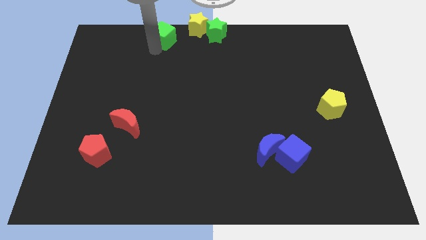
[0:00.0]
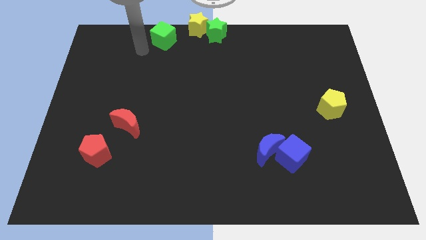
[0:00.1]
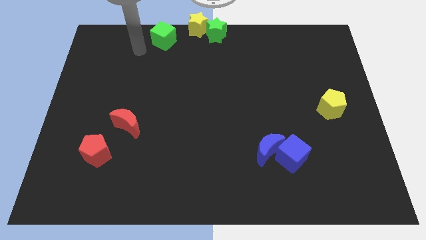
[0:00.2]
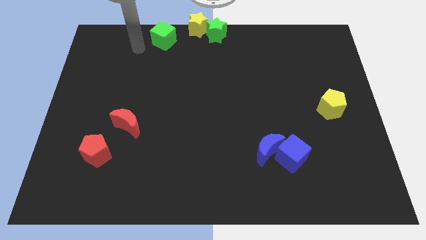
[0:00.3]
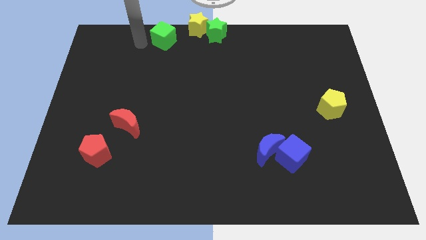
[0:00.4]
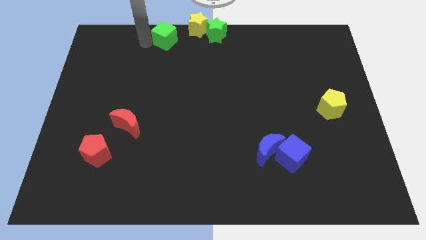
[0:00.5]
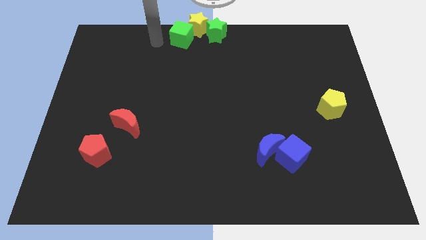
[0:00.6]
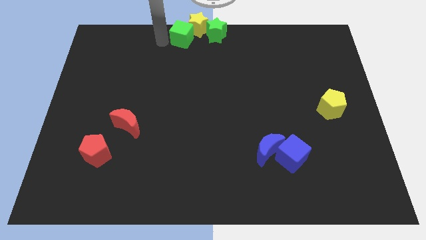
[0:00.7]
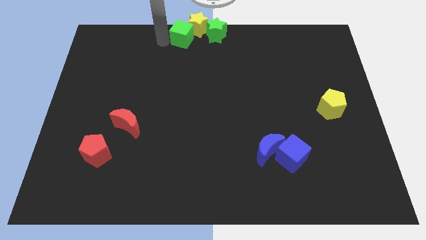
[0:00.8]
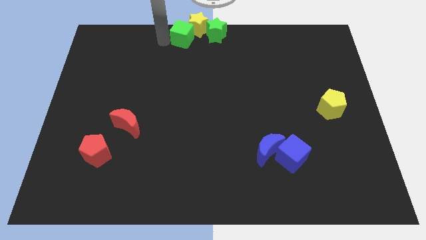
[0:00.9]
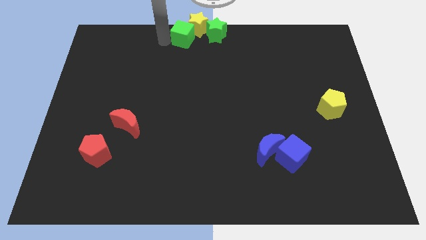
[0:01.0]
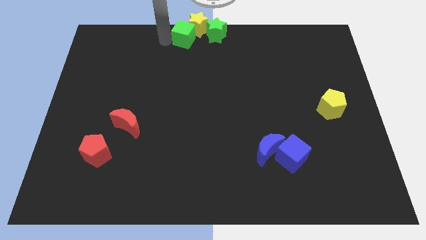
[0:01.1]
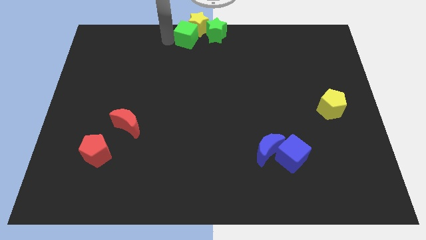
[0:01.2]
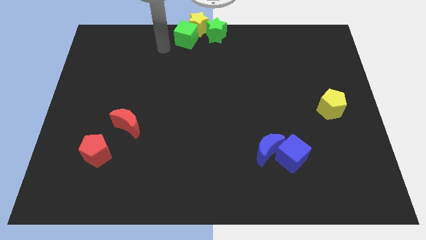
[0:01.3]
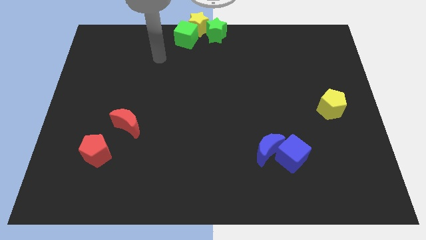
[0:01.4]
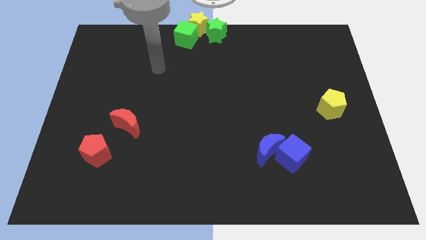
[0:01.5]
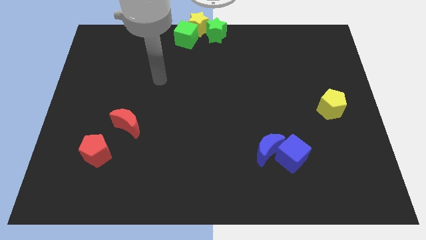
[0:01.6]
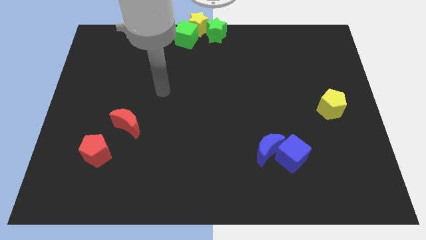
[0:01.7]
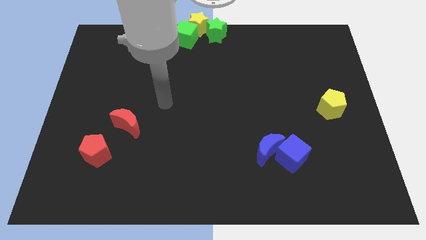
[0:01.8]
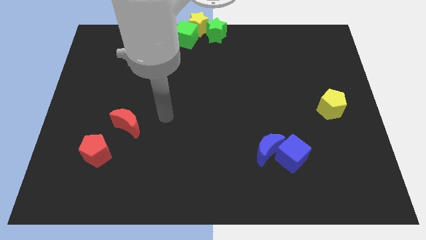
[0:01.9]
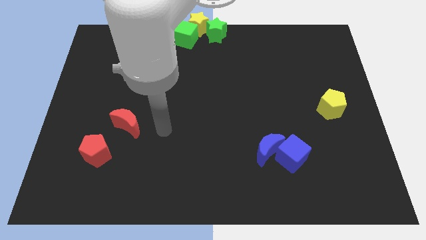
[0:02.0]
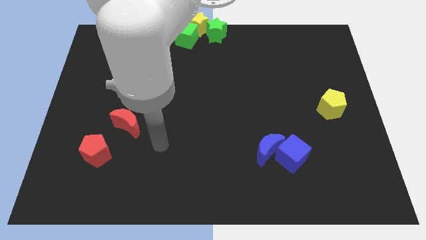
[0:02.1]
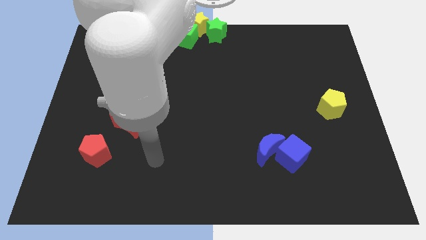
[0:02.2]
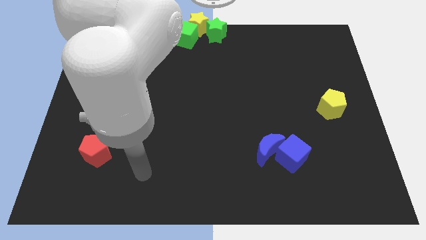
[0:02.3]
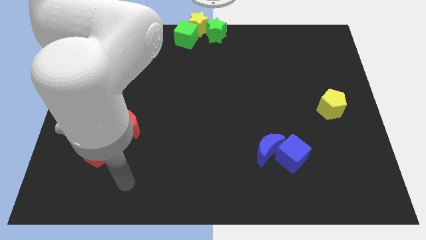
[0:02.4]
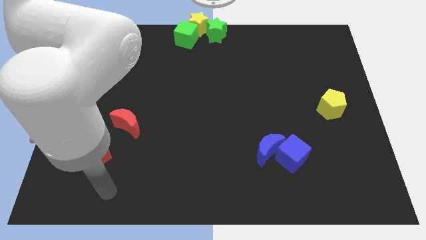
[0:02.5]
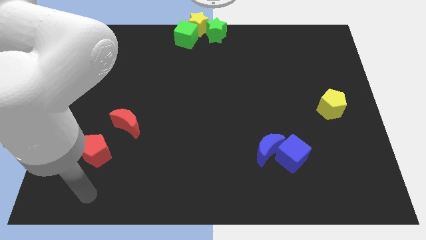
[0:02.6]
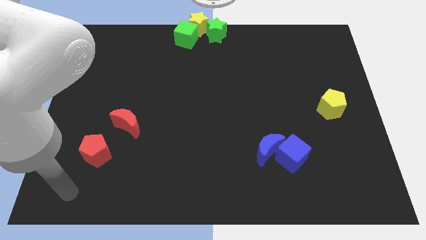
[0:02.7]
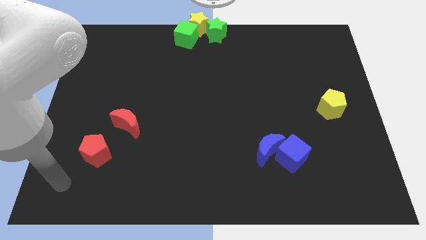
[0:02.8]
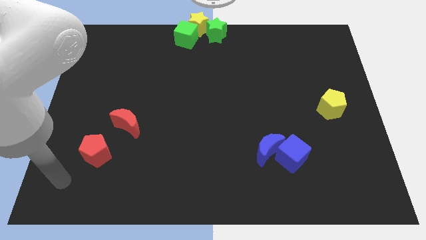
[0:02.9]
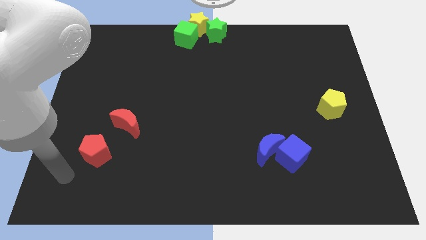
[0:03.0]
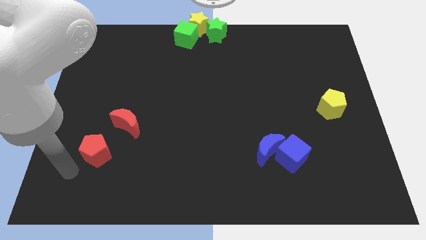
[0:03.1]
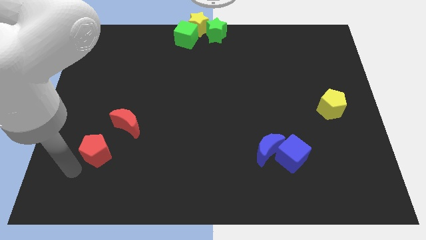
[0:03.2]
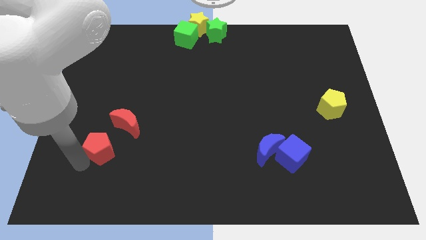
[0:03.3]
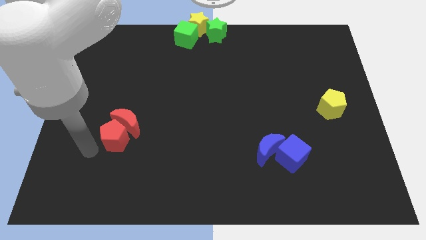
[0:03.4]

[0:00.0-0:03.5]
adjust the green cube into the yellow star diagonally to the bottom left

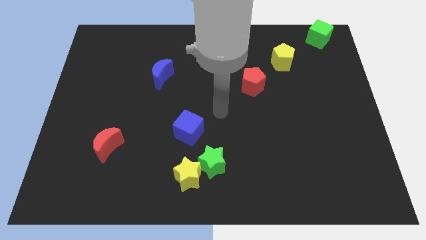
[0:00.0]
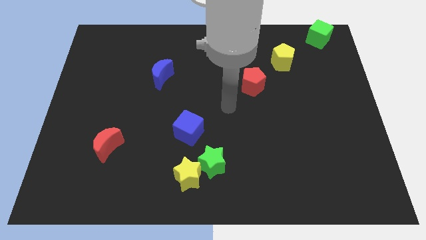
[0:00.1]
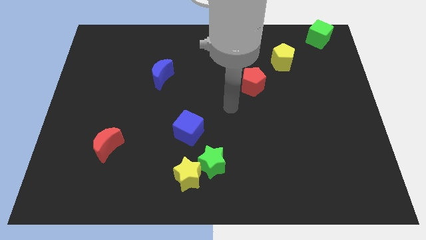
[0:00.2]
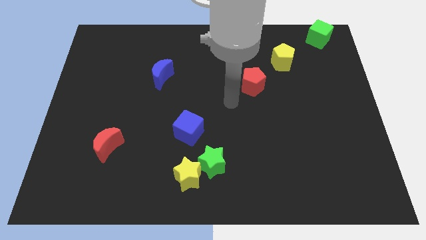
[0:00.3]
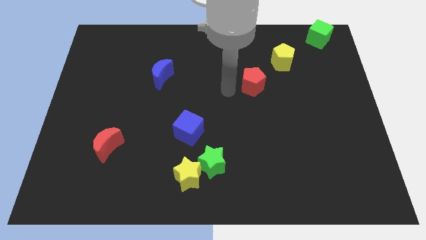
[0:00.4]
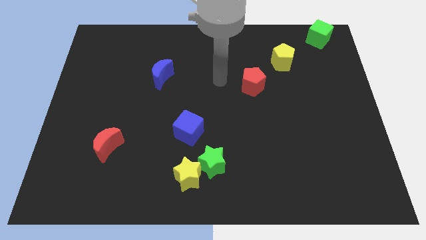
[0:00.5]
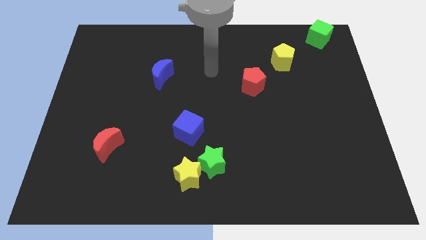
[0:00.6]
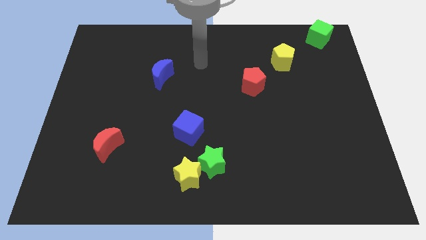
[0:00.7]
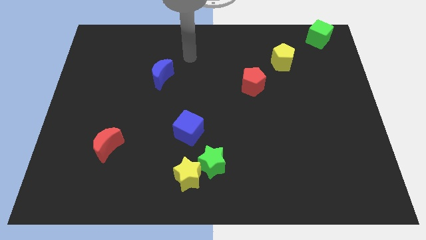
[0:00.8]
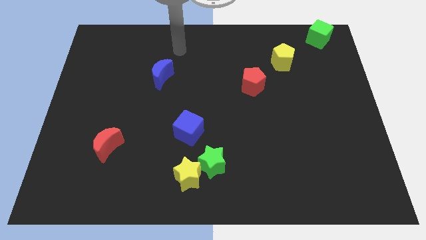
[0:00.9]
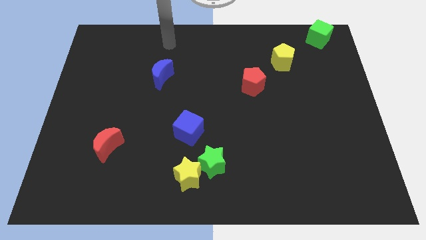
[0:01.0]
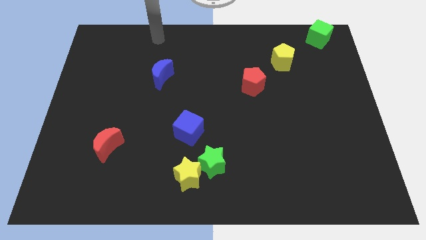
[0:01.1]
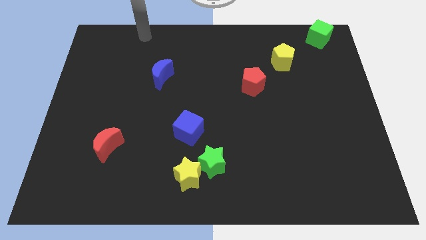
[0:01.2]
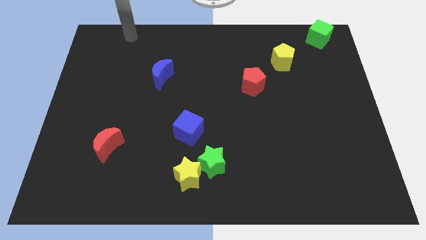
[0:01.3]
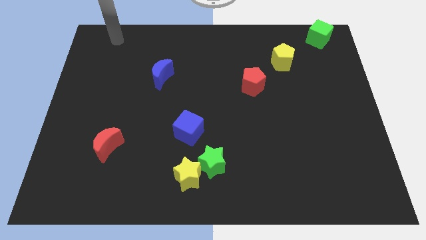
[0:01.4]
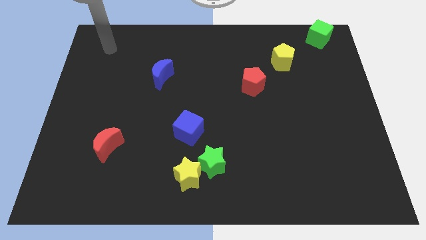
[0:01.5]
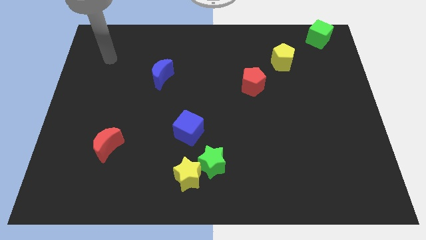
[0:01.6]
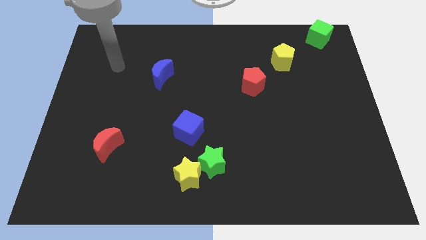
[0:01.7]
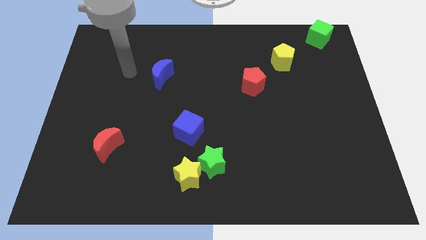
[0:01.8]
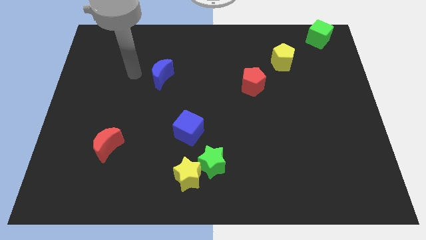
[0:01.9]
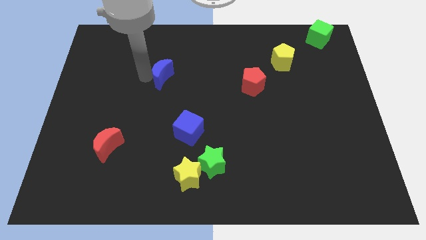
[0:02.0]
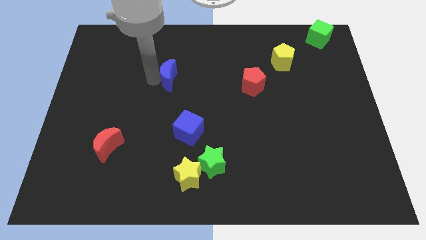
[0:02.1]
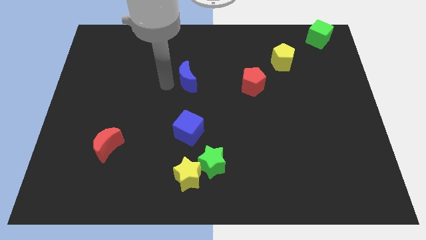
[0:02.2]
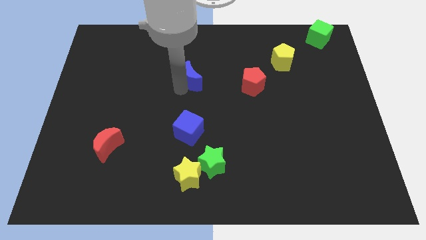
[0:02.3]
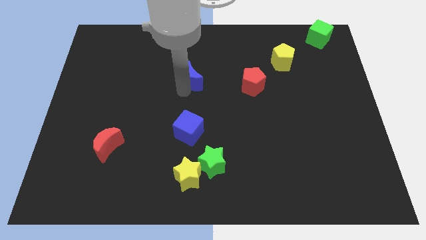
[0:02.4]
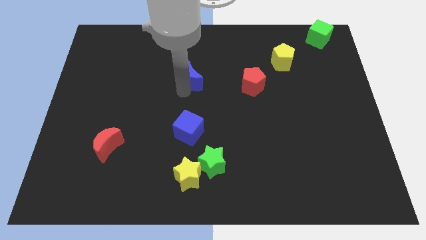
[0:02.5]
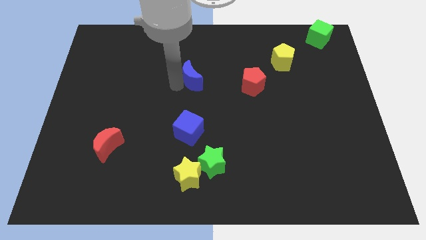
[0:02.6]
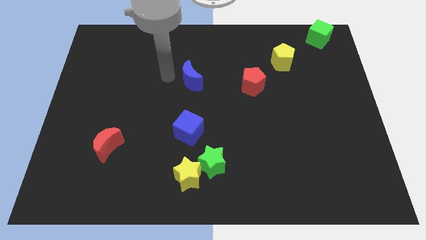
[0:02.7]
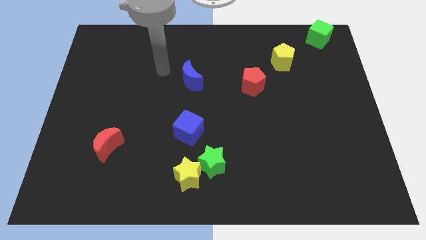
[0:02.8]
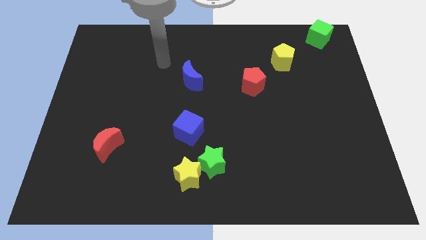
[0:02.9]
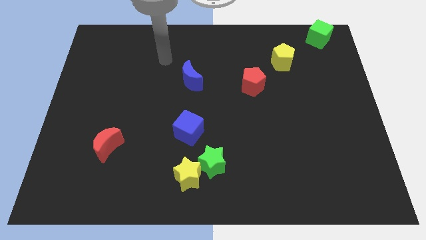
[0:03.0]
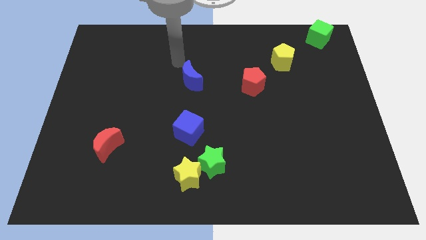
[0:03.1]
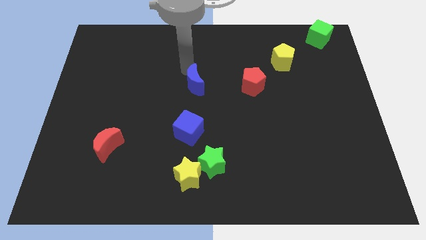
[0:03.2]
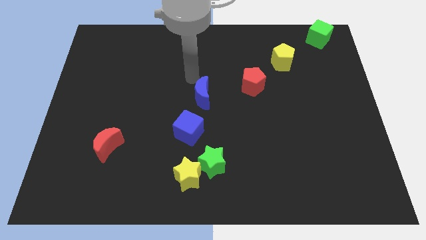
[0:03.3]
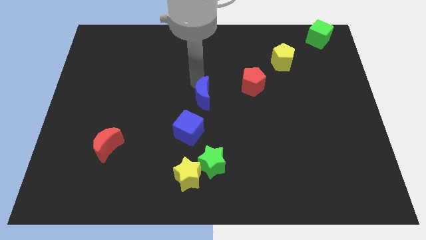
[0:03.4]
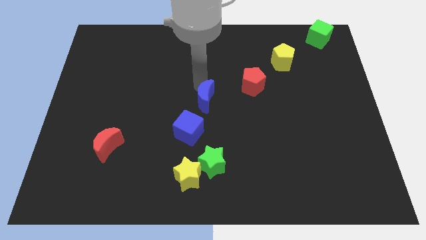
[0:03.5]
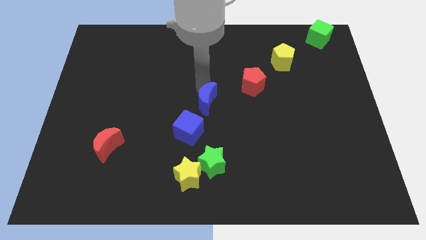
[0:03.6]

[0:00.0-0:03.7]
place the blue crescent above the blue cube

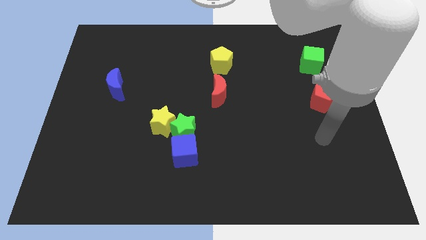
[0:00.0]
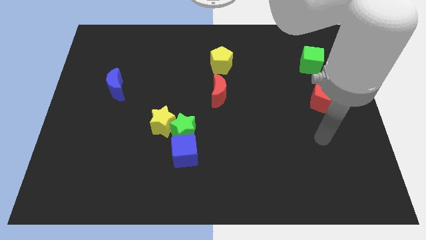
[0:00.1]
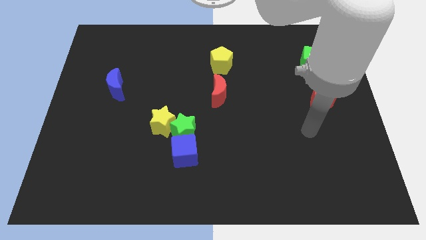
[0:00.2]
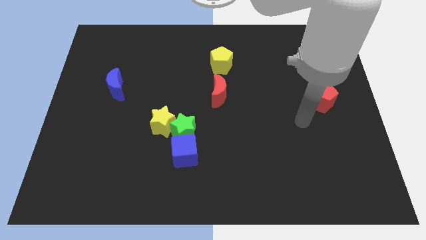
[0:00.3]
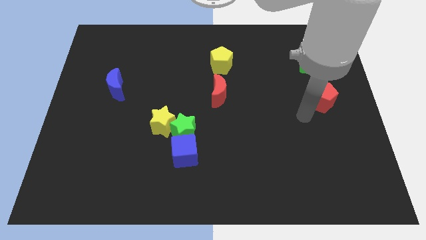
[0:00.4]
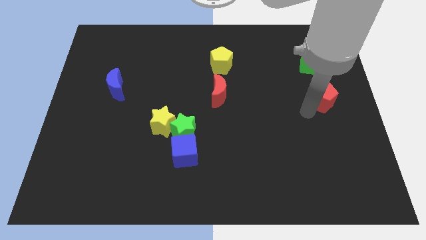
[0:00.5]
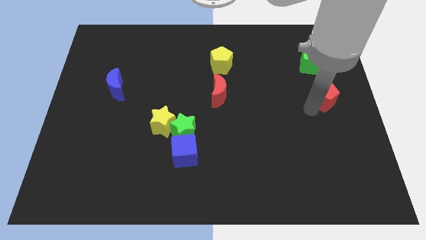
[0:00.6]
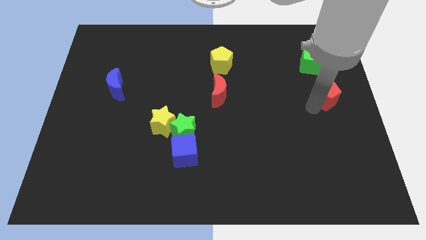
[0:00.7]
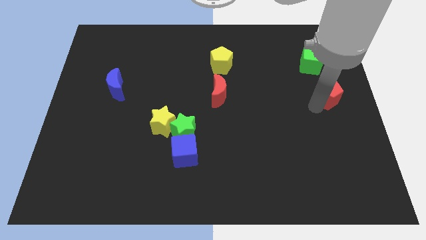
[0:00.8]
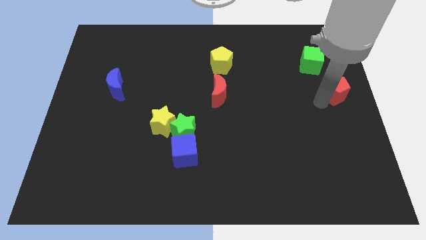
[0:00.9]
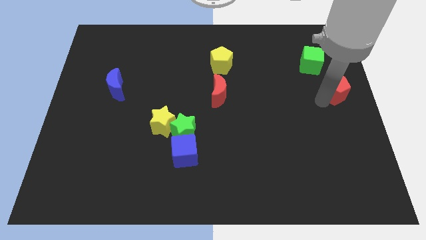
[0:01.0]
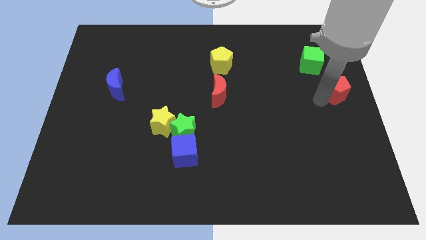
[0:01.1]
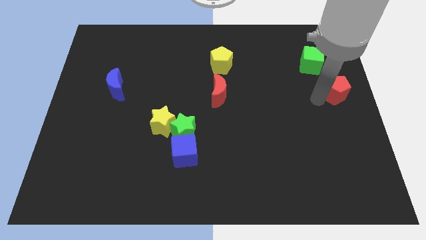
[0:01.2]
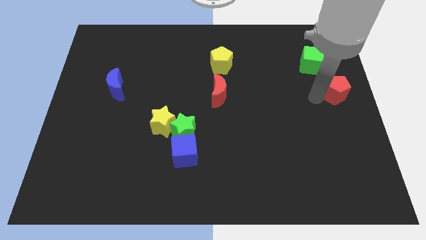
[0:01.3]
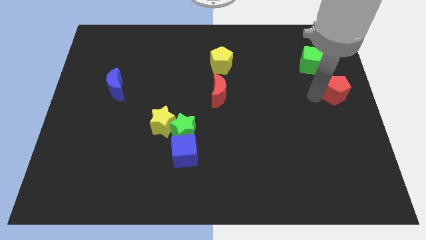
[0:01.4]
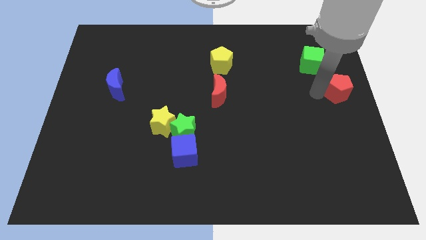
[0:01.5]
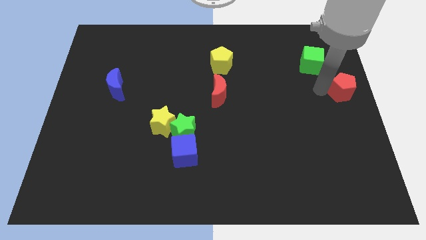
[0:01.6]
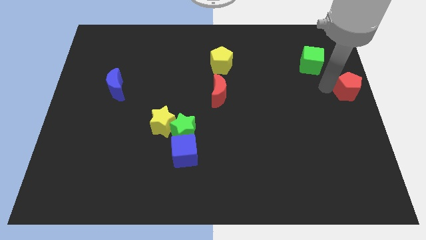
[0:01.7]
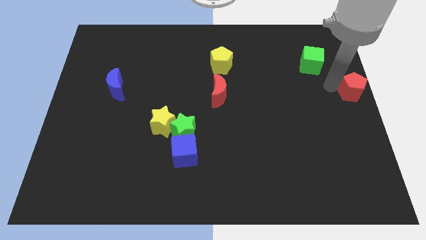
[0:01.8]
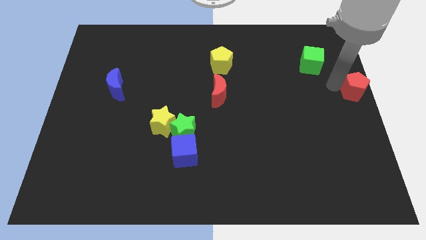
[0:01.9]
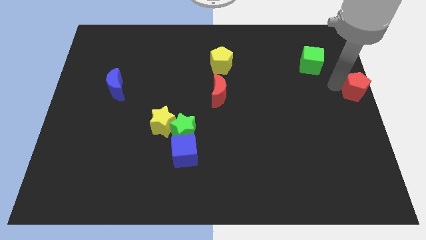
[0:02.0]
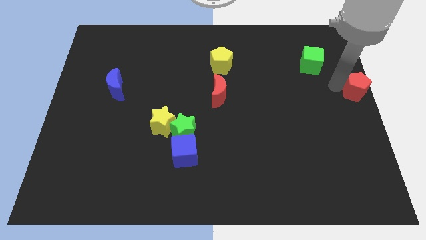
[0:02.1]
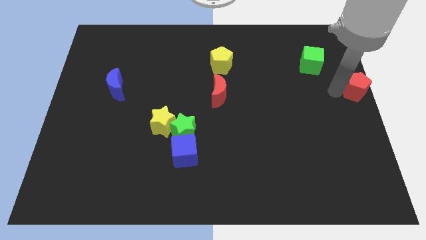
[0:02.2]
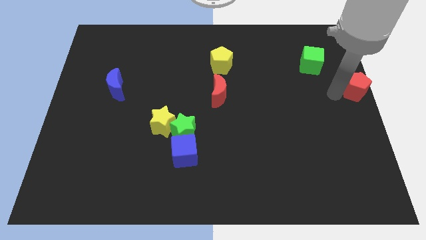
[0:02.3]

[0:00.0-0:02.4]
move the red pentagon towards the center right of the board
